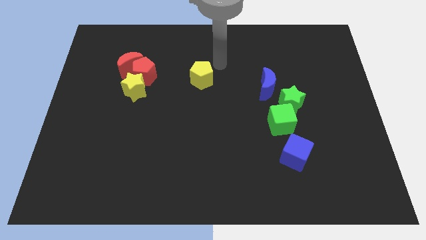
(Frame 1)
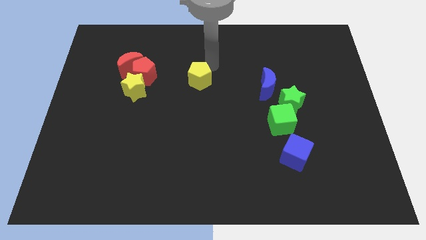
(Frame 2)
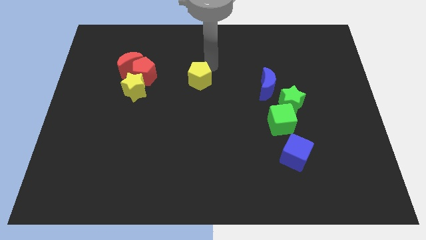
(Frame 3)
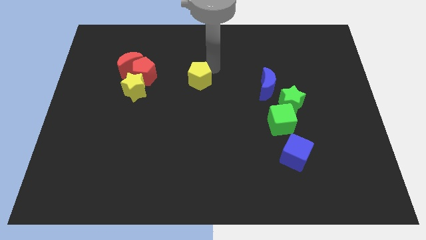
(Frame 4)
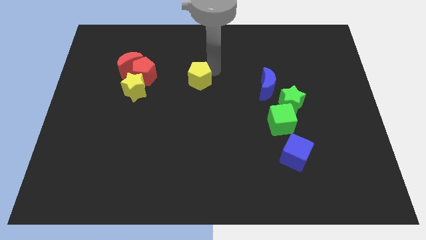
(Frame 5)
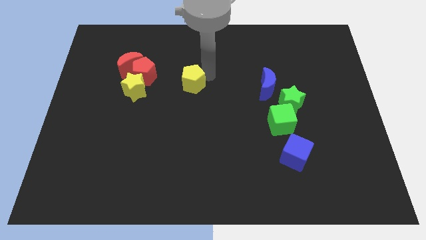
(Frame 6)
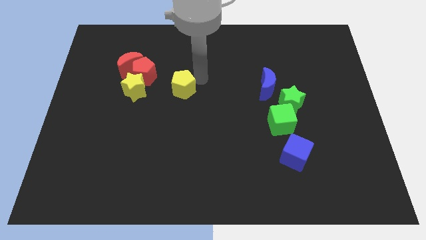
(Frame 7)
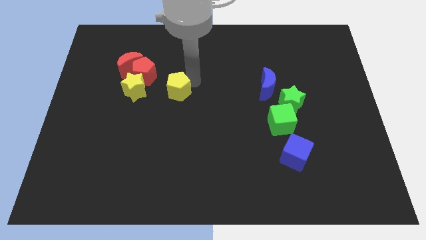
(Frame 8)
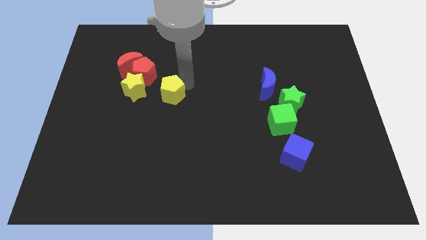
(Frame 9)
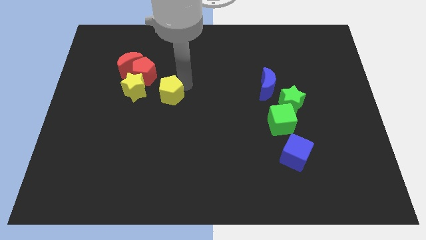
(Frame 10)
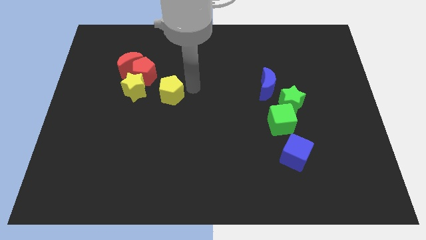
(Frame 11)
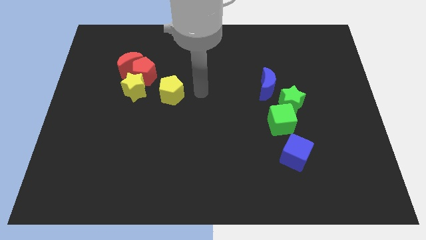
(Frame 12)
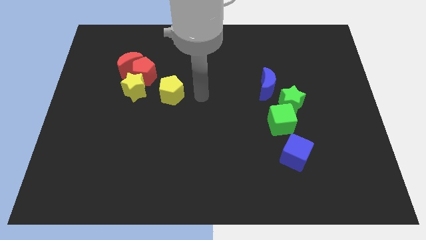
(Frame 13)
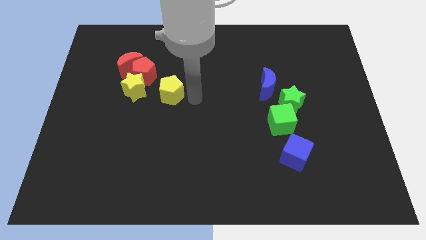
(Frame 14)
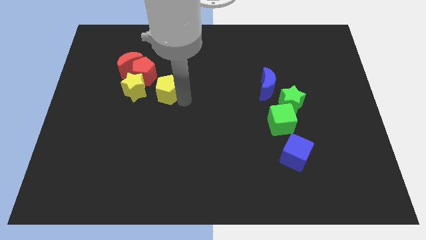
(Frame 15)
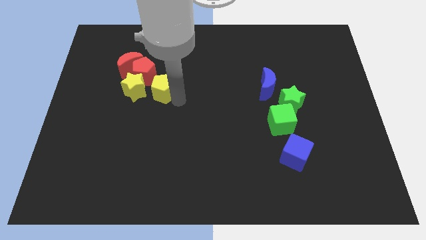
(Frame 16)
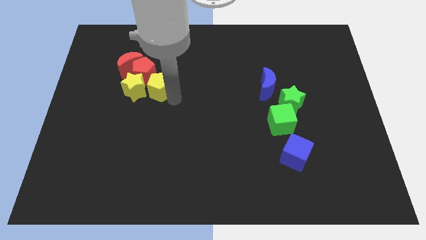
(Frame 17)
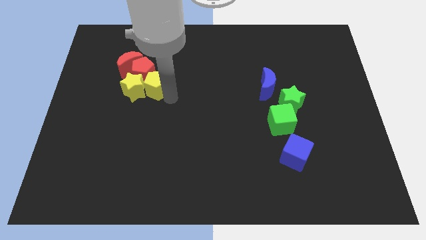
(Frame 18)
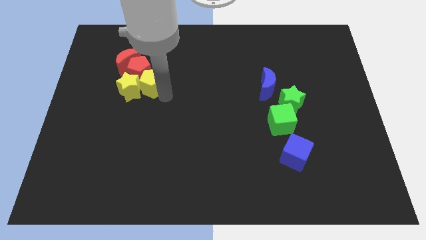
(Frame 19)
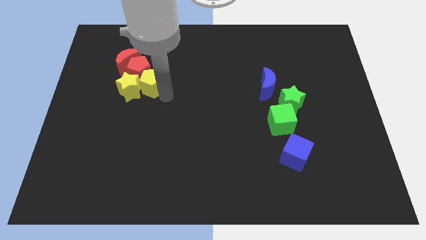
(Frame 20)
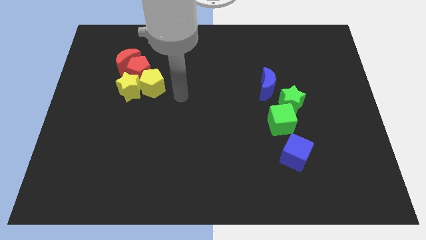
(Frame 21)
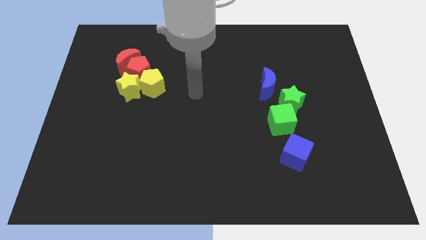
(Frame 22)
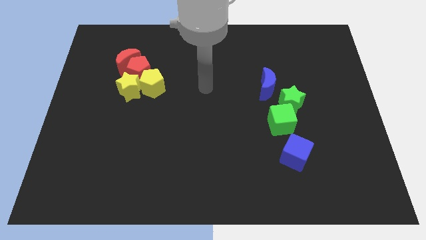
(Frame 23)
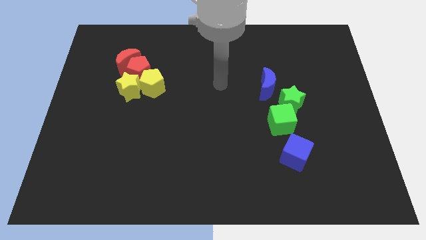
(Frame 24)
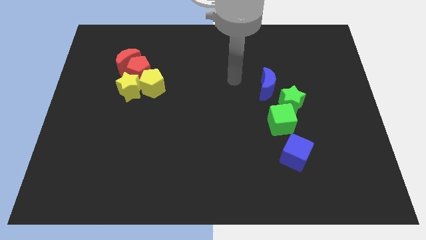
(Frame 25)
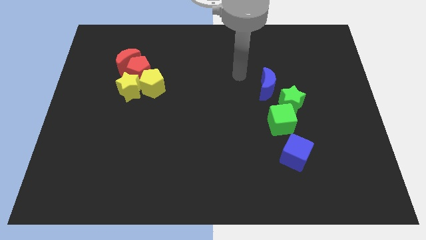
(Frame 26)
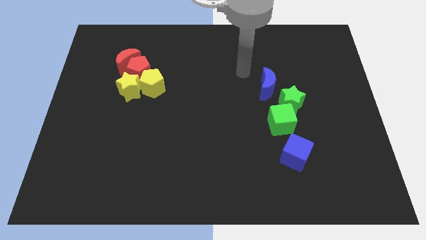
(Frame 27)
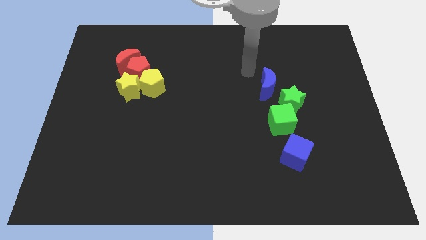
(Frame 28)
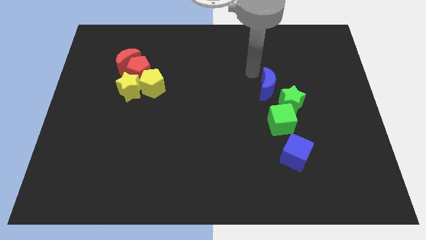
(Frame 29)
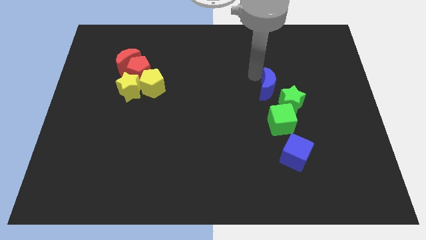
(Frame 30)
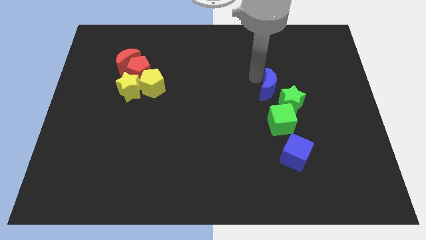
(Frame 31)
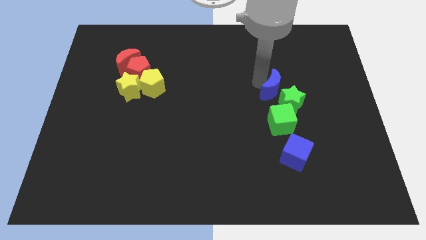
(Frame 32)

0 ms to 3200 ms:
push the yellow pentagon into the group of red blocks

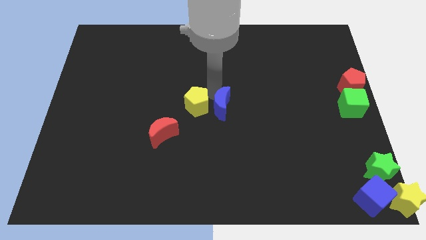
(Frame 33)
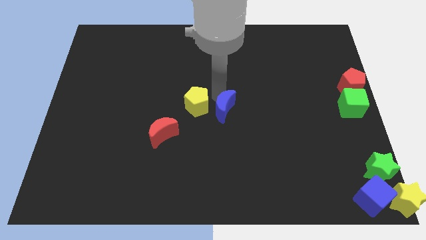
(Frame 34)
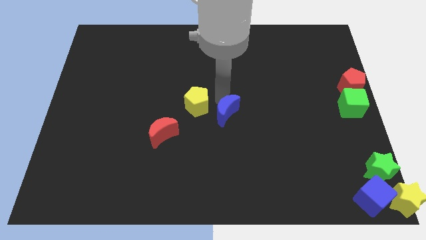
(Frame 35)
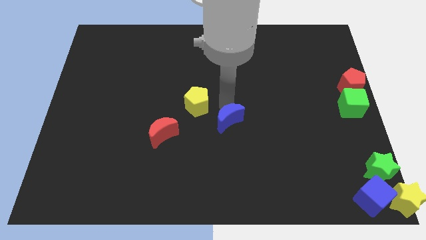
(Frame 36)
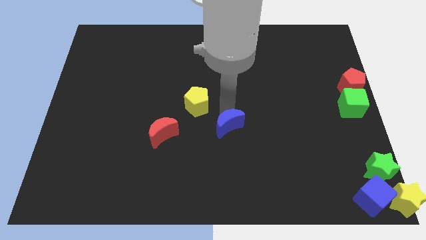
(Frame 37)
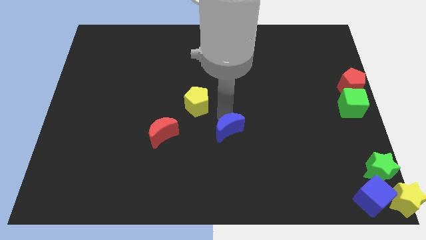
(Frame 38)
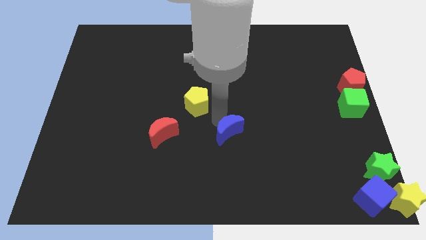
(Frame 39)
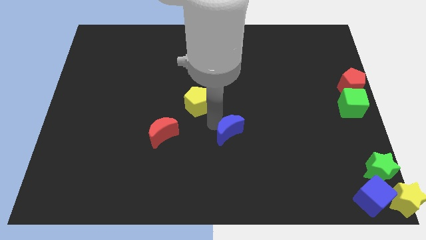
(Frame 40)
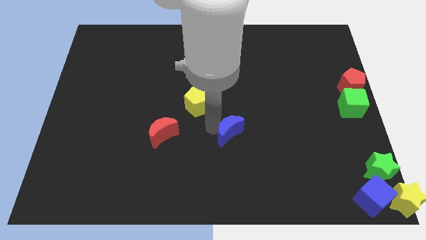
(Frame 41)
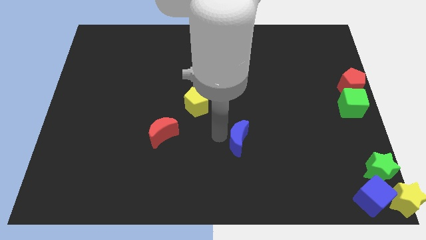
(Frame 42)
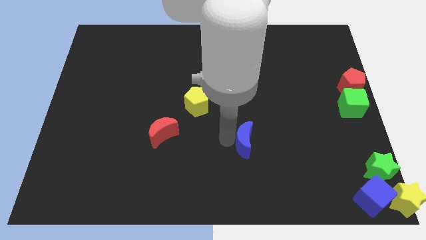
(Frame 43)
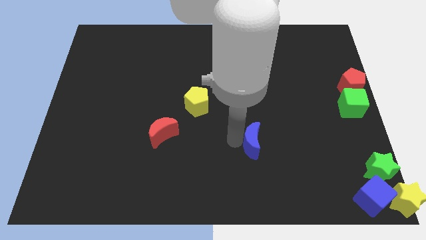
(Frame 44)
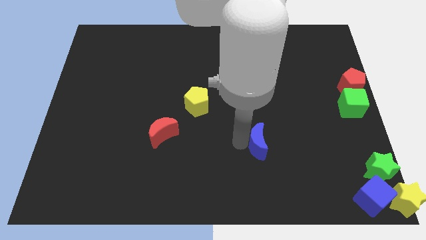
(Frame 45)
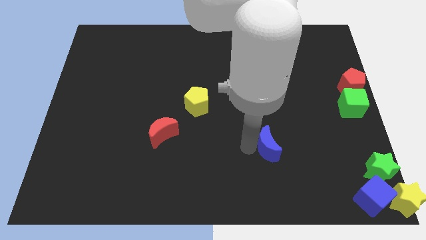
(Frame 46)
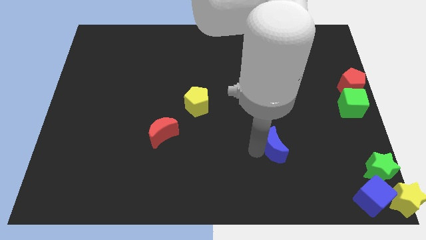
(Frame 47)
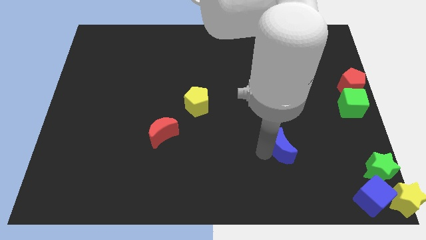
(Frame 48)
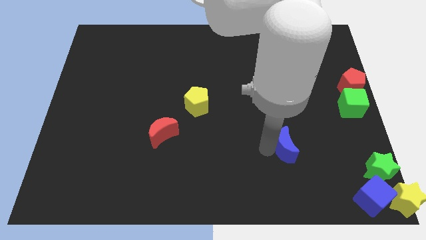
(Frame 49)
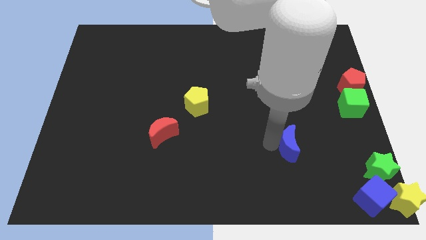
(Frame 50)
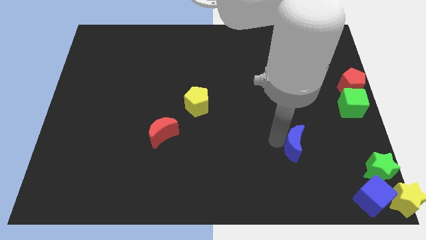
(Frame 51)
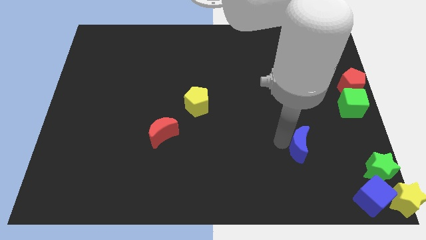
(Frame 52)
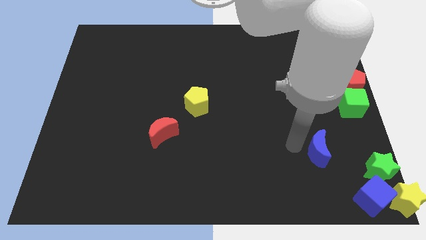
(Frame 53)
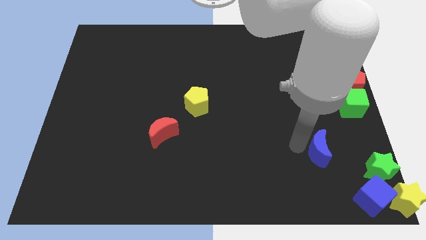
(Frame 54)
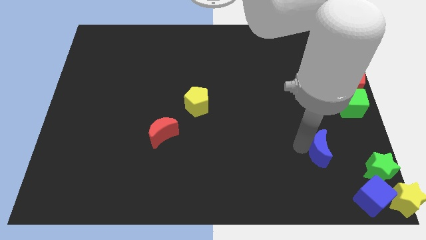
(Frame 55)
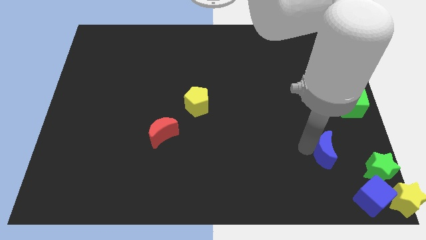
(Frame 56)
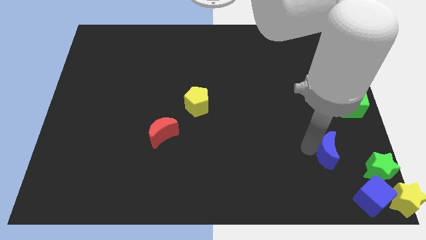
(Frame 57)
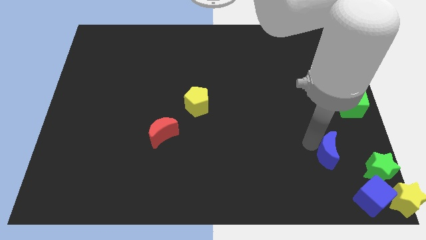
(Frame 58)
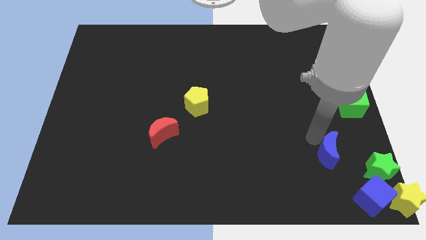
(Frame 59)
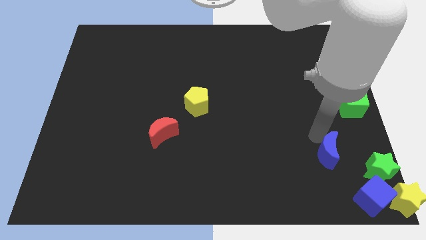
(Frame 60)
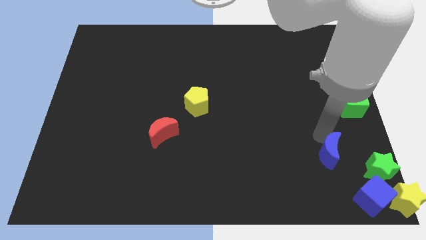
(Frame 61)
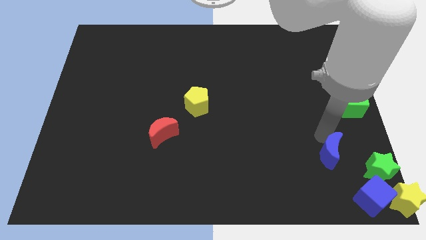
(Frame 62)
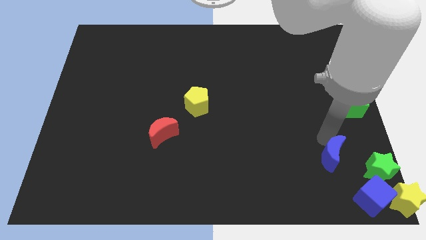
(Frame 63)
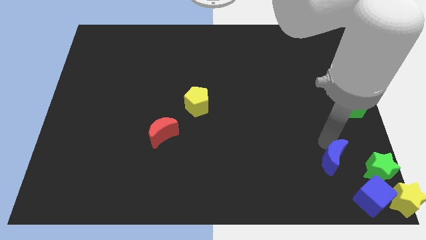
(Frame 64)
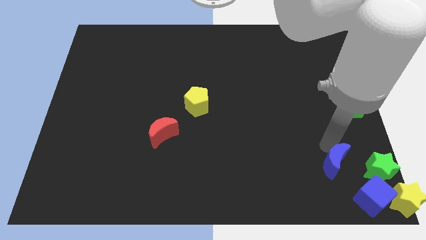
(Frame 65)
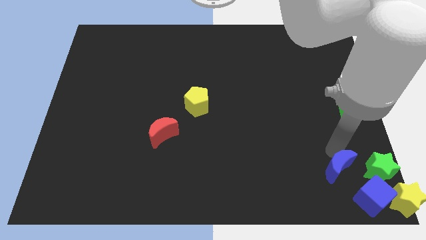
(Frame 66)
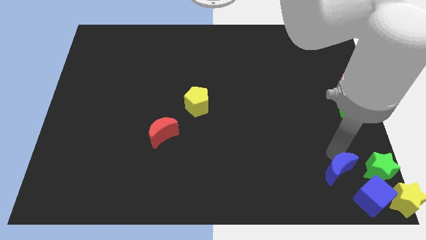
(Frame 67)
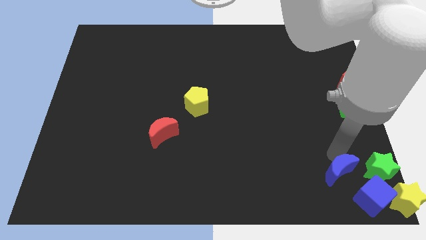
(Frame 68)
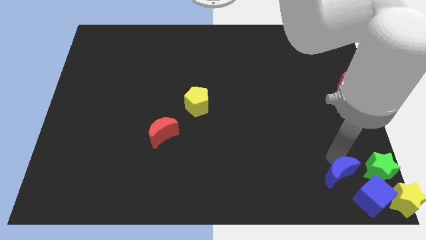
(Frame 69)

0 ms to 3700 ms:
move blue moon towards blue cube

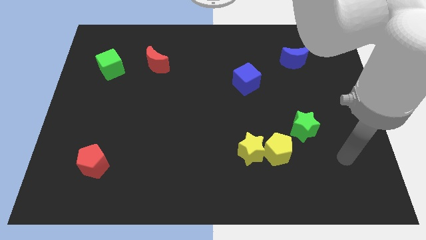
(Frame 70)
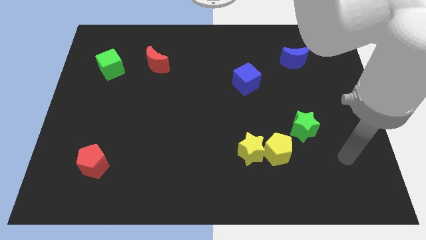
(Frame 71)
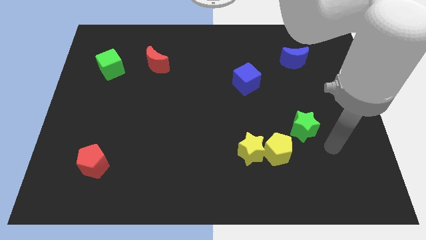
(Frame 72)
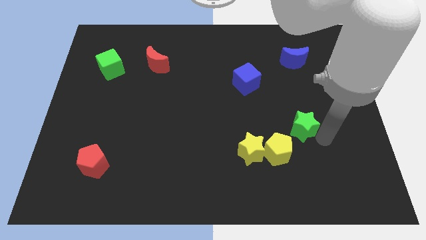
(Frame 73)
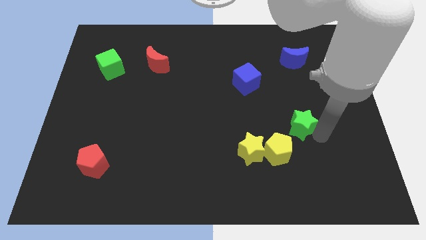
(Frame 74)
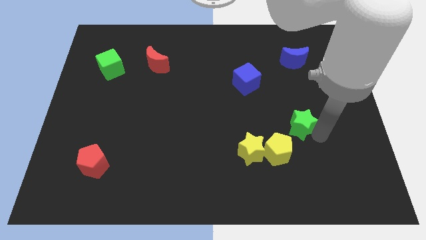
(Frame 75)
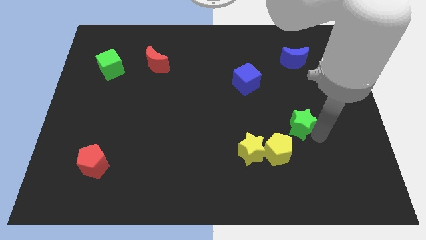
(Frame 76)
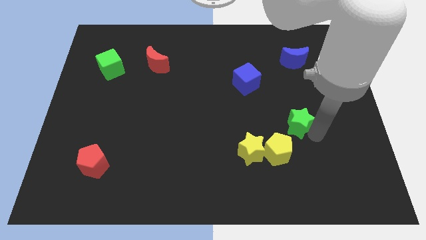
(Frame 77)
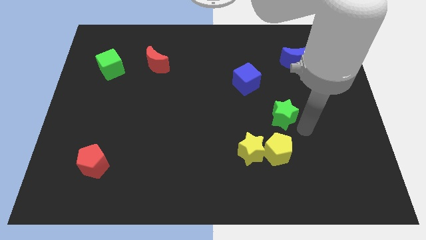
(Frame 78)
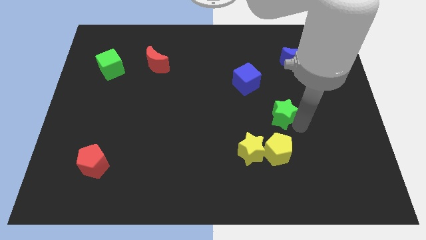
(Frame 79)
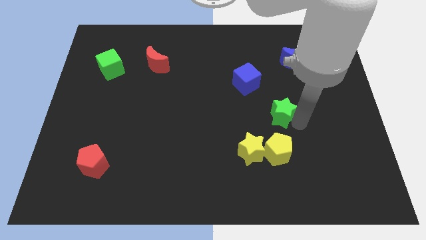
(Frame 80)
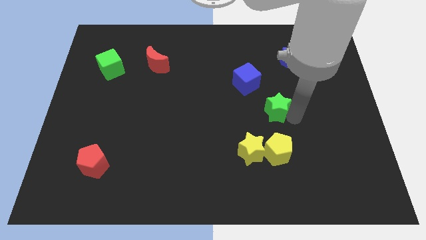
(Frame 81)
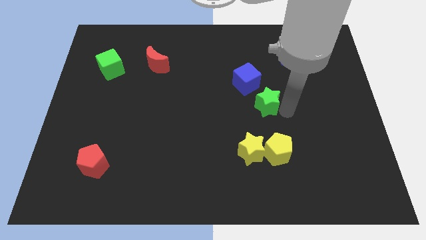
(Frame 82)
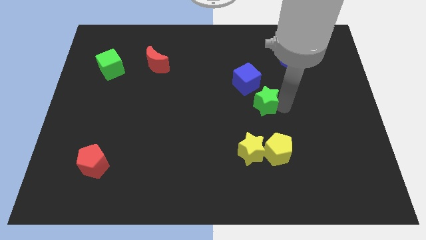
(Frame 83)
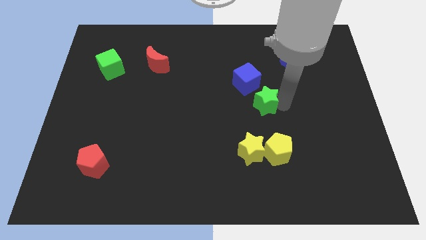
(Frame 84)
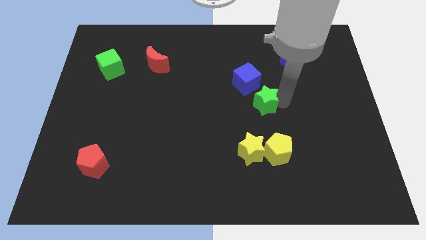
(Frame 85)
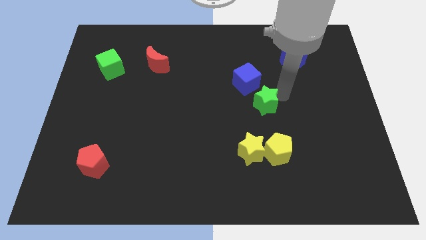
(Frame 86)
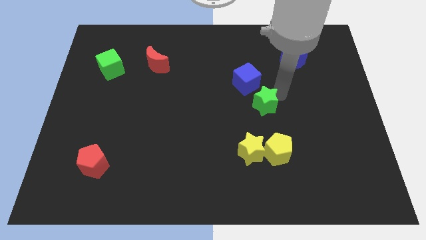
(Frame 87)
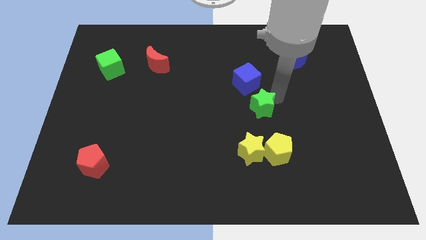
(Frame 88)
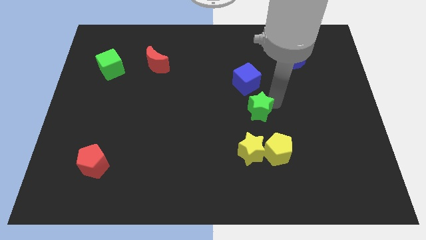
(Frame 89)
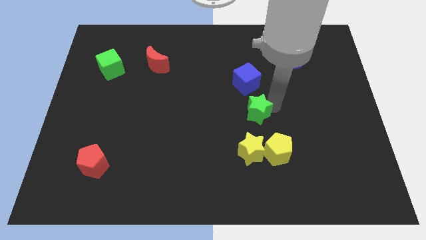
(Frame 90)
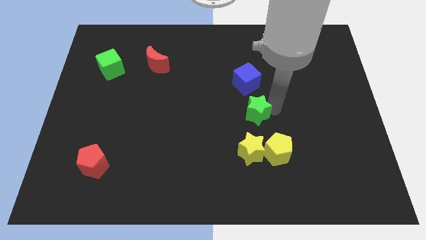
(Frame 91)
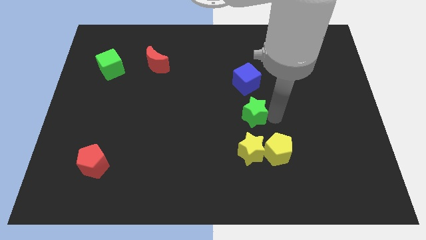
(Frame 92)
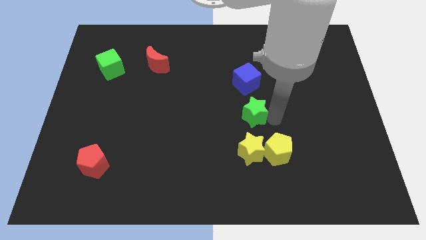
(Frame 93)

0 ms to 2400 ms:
put the green star below the blue cube
